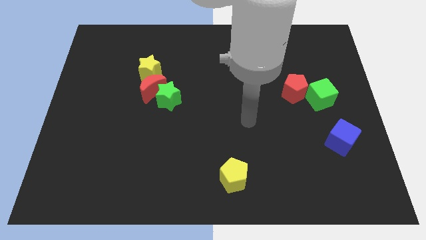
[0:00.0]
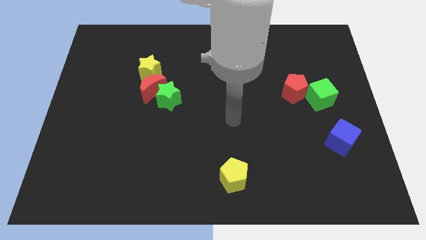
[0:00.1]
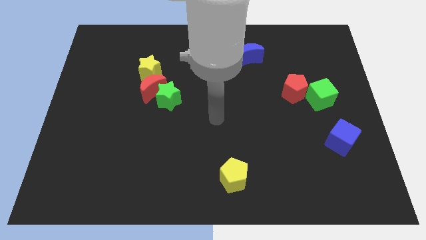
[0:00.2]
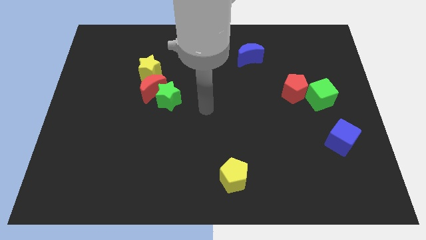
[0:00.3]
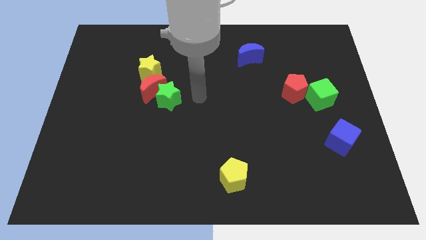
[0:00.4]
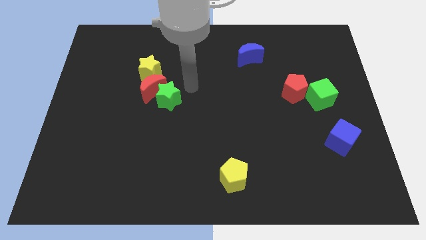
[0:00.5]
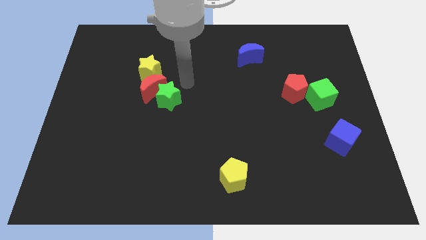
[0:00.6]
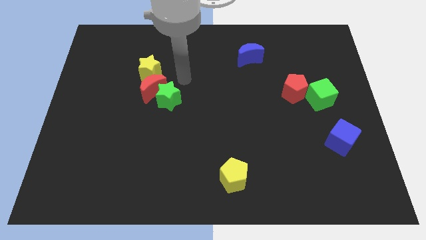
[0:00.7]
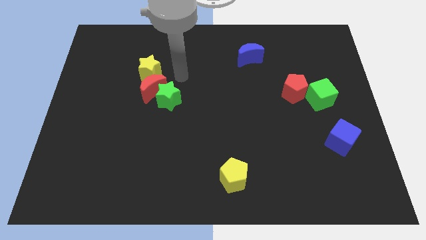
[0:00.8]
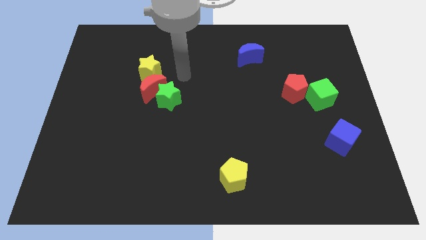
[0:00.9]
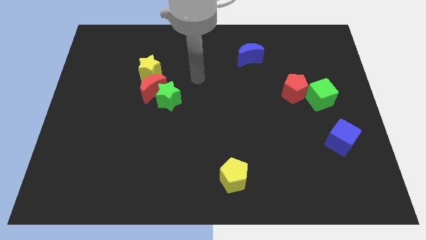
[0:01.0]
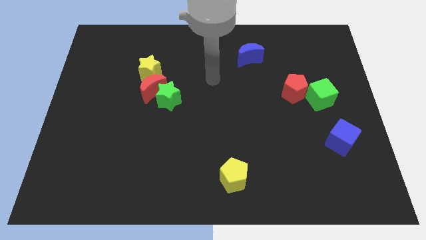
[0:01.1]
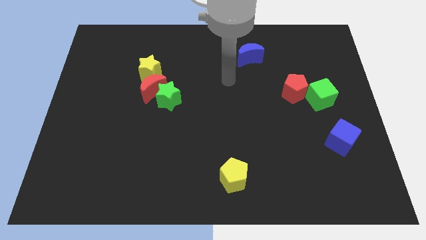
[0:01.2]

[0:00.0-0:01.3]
put your hand between the green star and blue moon

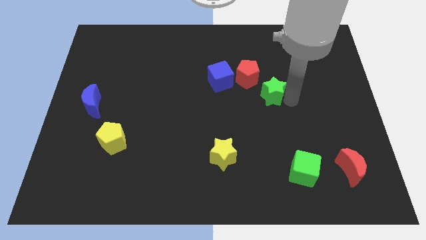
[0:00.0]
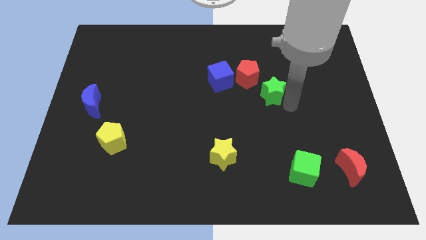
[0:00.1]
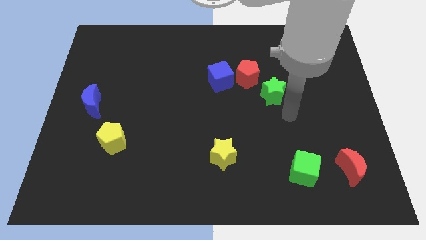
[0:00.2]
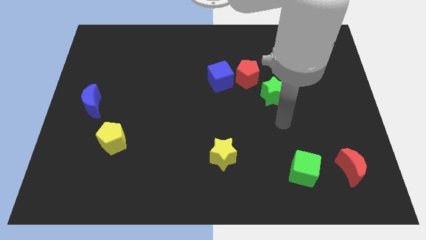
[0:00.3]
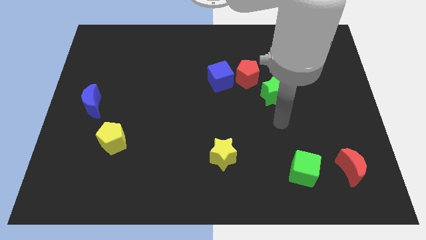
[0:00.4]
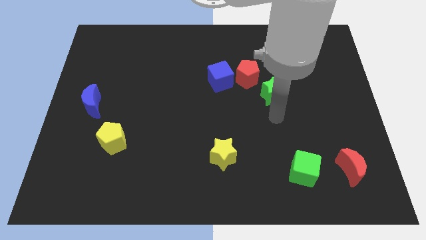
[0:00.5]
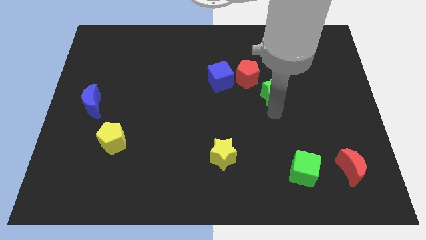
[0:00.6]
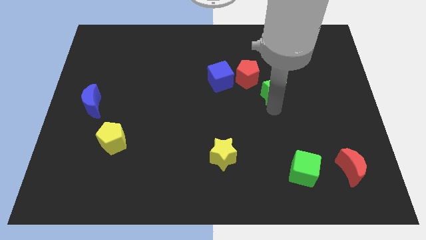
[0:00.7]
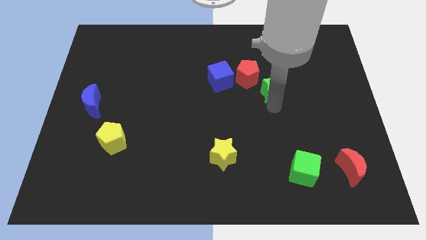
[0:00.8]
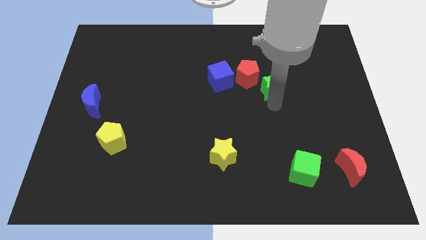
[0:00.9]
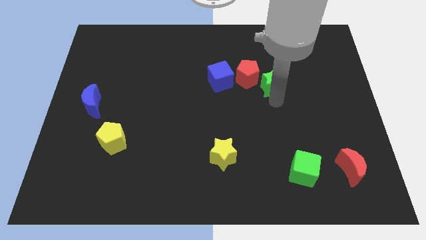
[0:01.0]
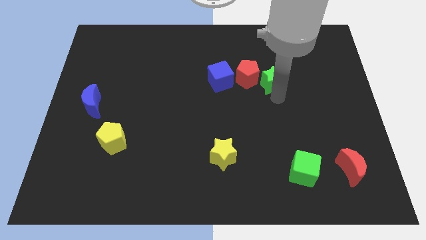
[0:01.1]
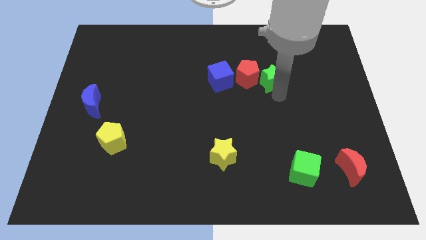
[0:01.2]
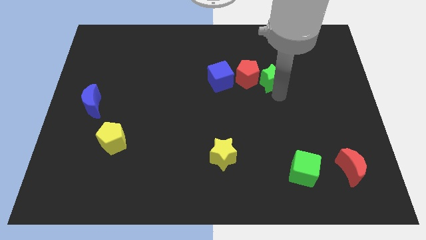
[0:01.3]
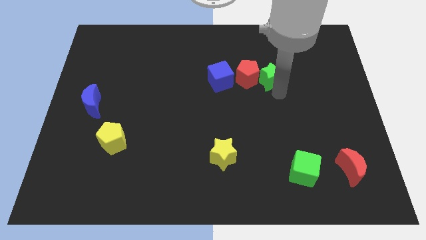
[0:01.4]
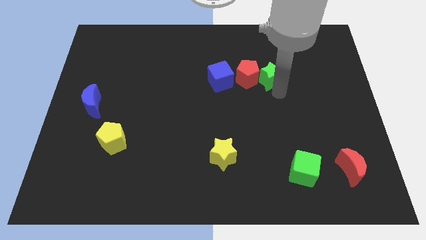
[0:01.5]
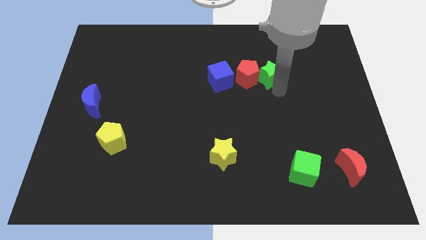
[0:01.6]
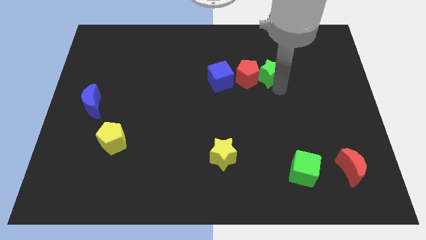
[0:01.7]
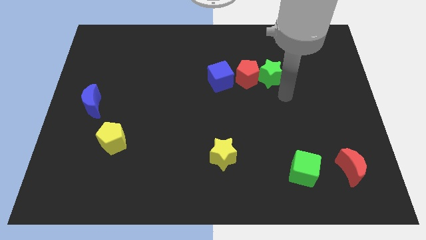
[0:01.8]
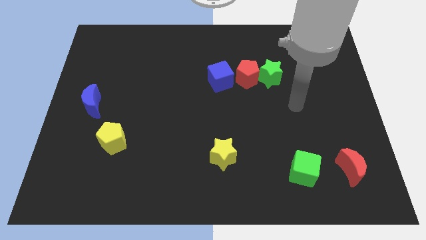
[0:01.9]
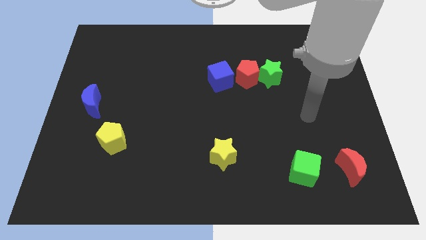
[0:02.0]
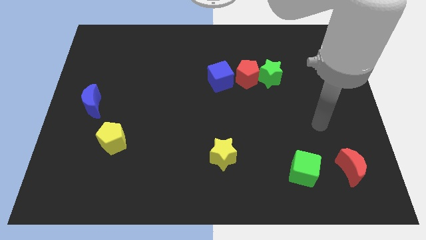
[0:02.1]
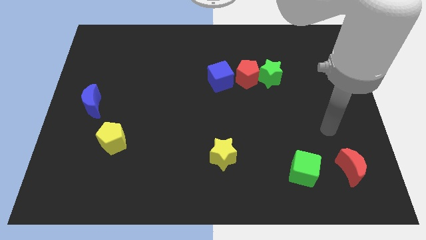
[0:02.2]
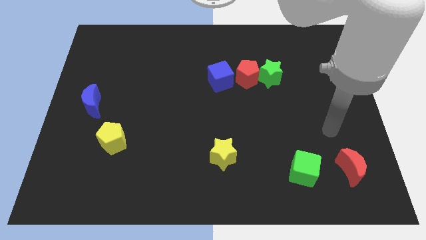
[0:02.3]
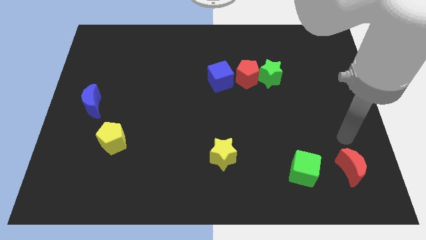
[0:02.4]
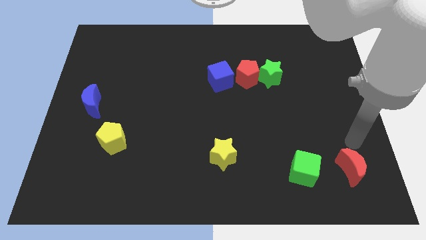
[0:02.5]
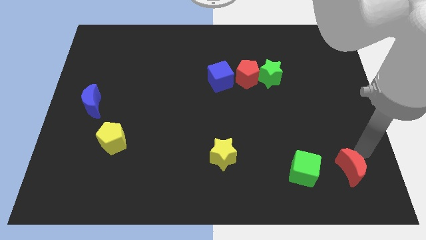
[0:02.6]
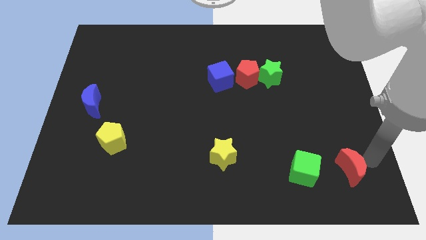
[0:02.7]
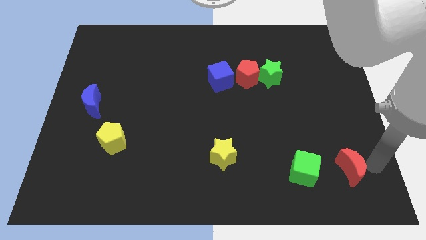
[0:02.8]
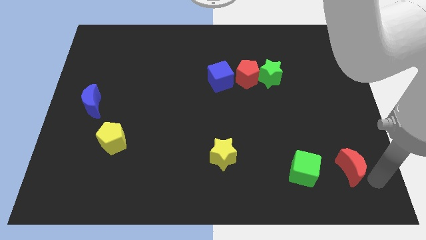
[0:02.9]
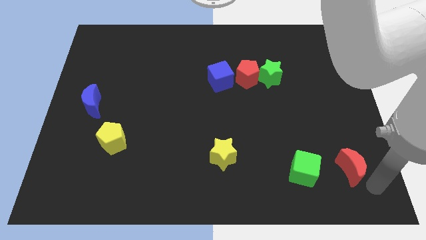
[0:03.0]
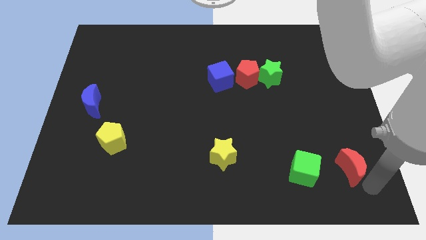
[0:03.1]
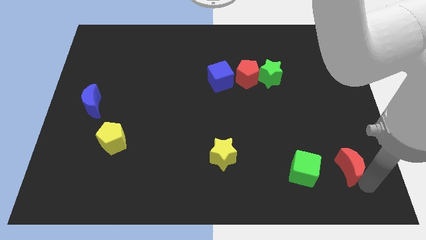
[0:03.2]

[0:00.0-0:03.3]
place the green star to the right side of the red pentagon

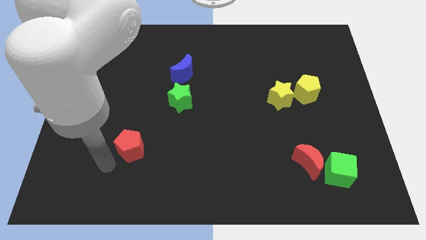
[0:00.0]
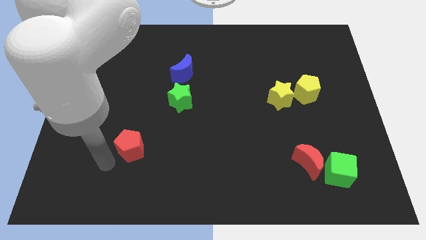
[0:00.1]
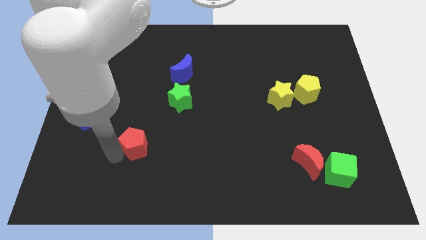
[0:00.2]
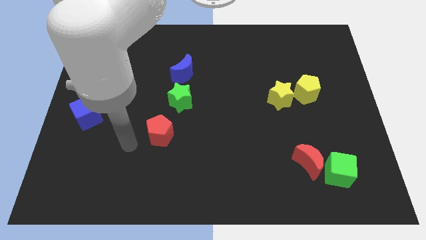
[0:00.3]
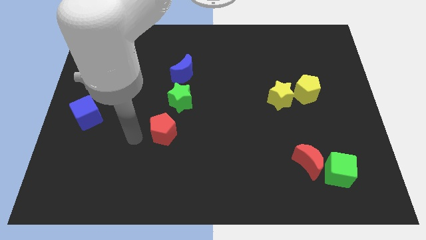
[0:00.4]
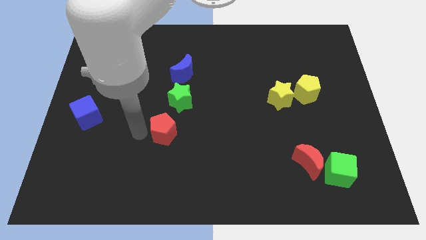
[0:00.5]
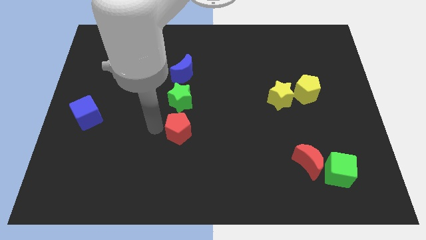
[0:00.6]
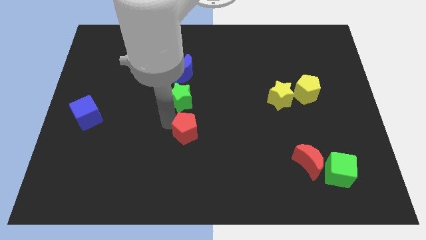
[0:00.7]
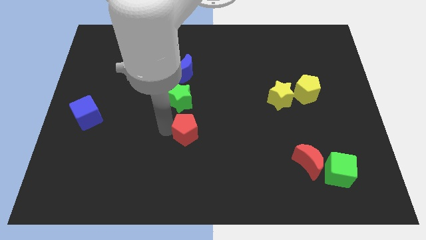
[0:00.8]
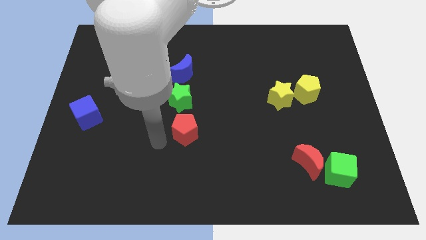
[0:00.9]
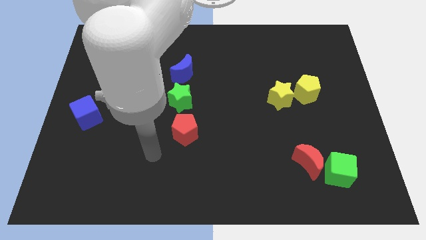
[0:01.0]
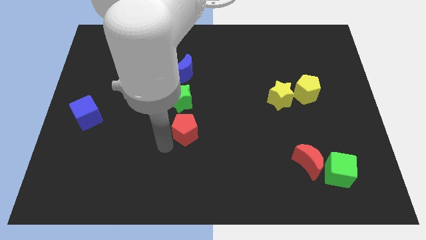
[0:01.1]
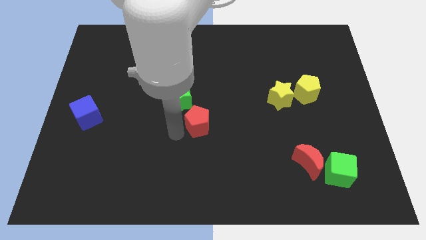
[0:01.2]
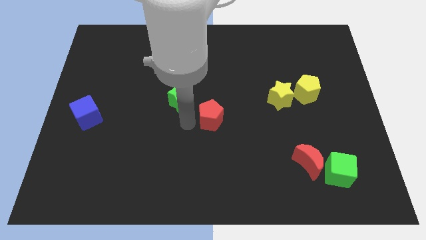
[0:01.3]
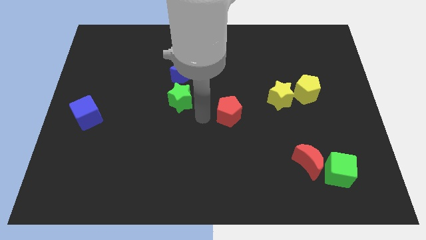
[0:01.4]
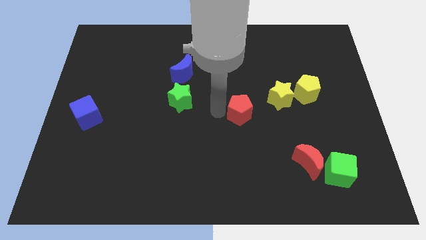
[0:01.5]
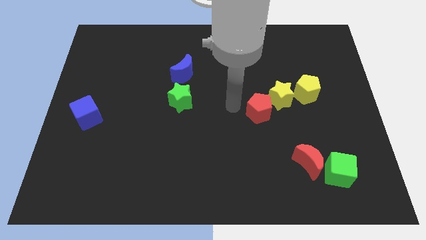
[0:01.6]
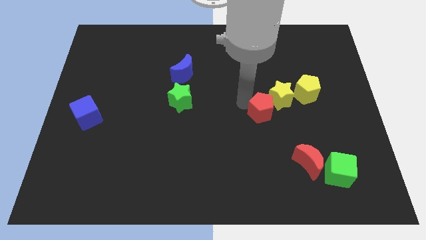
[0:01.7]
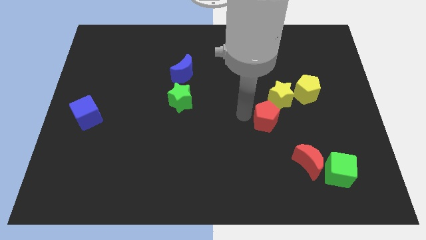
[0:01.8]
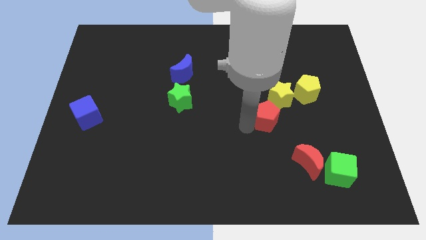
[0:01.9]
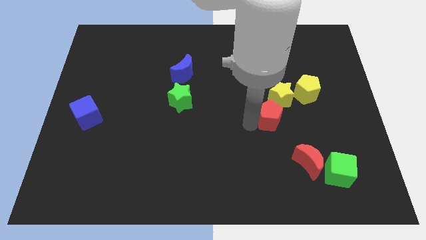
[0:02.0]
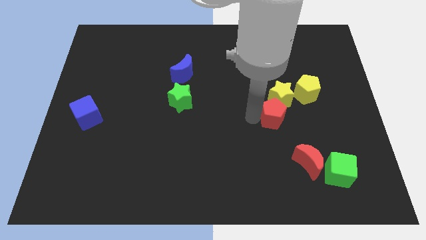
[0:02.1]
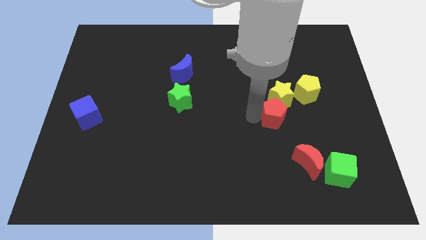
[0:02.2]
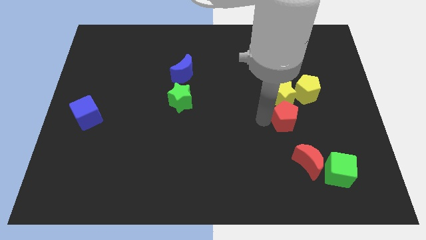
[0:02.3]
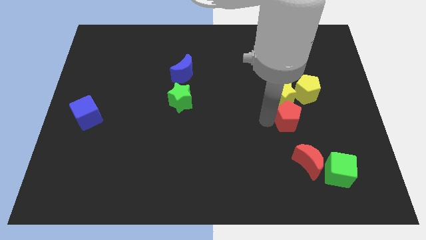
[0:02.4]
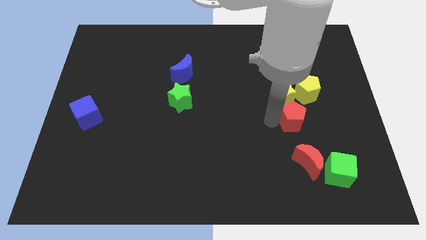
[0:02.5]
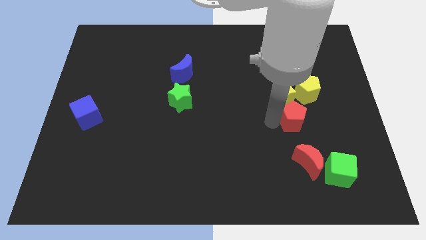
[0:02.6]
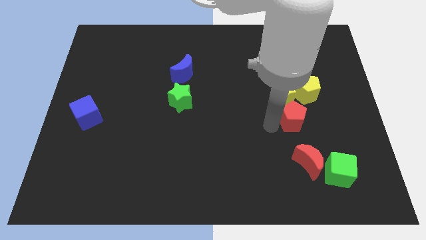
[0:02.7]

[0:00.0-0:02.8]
put the red pentagon at the bottom of the yellow star

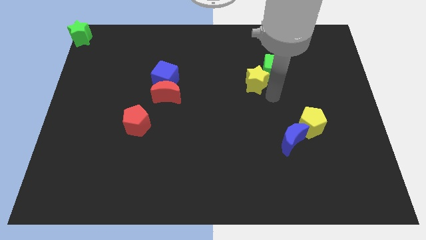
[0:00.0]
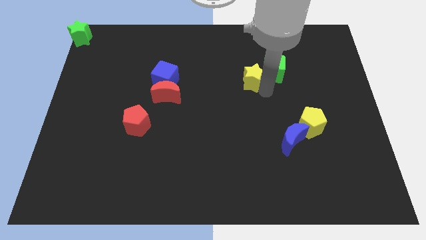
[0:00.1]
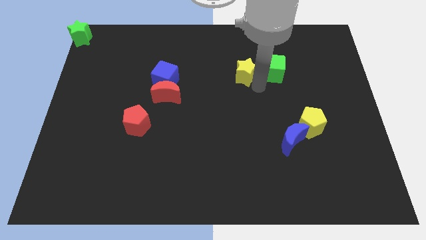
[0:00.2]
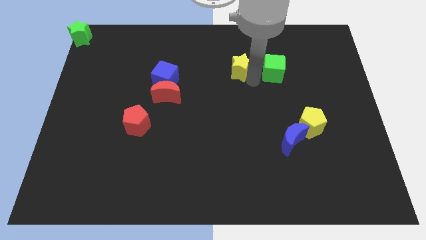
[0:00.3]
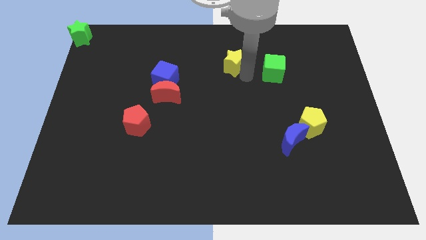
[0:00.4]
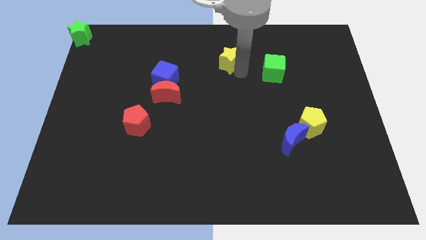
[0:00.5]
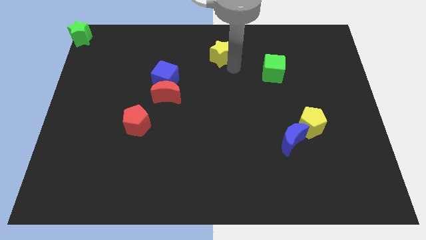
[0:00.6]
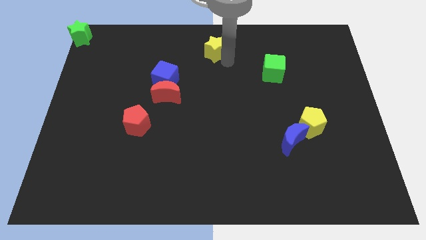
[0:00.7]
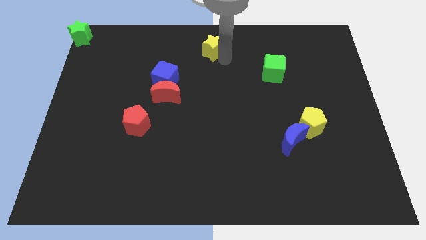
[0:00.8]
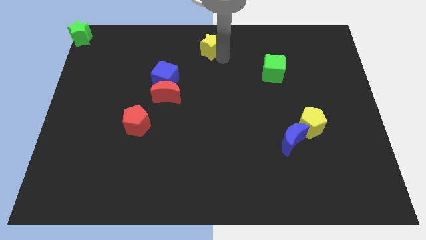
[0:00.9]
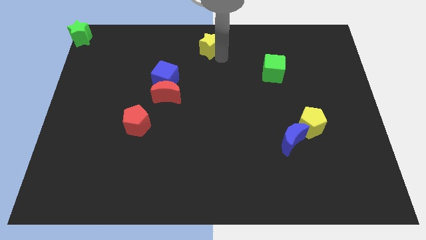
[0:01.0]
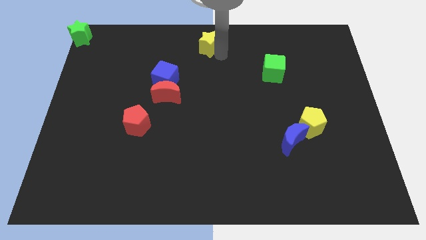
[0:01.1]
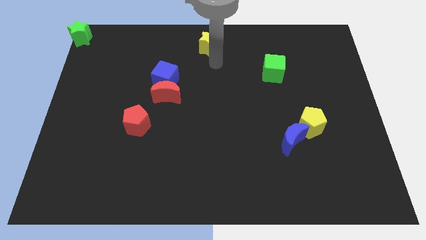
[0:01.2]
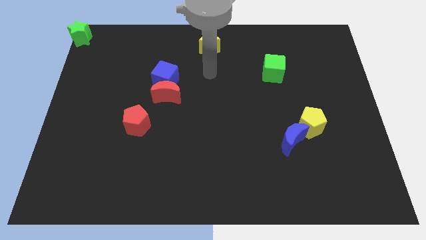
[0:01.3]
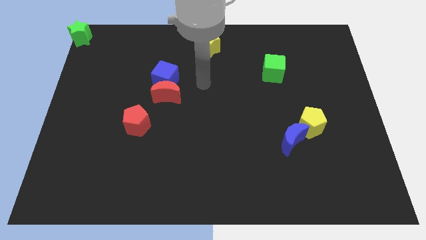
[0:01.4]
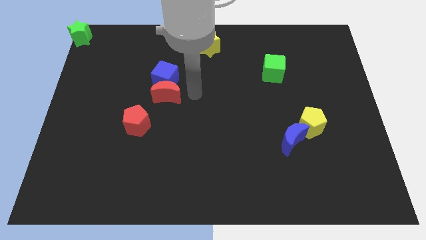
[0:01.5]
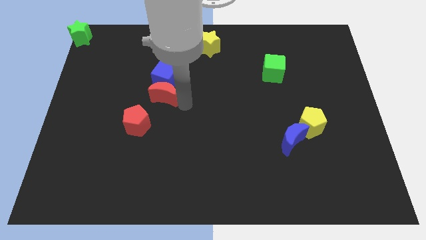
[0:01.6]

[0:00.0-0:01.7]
push the yellow star towards the top center of the board
